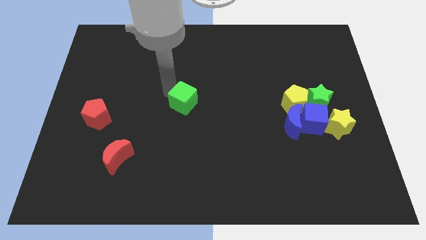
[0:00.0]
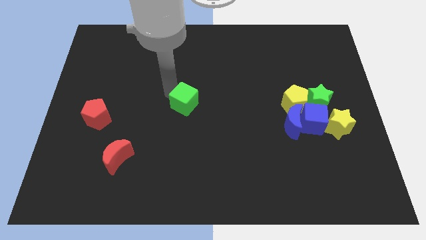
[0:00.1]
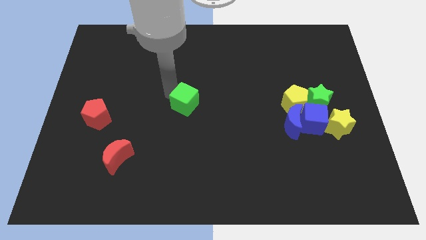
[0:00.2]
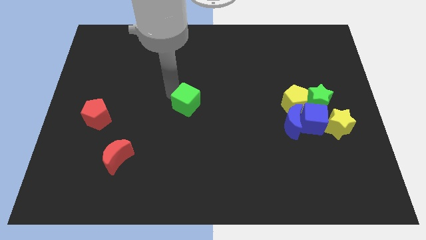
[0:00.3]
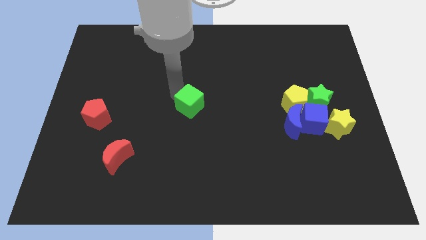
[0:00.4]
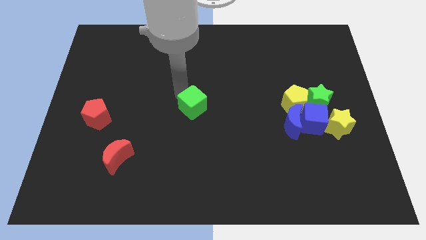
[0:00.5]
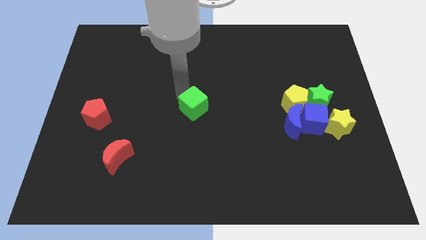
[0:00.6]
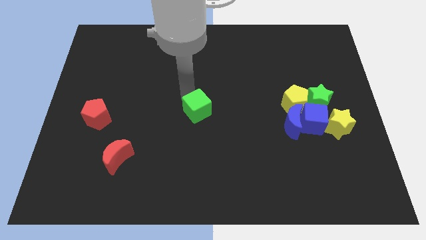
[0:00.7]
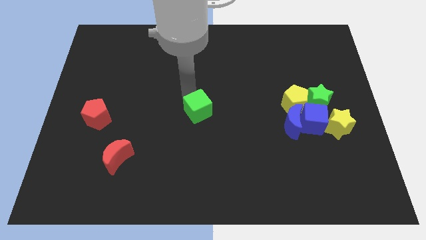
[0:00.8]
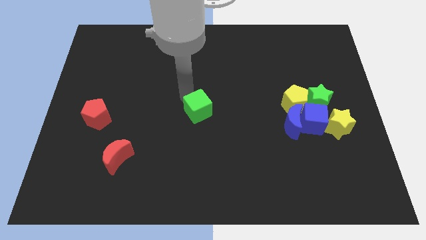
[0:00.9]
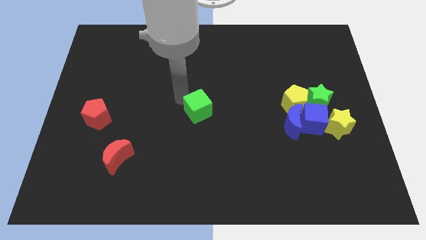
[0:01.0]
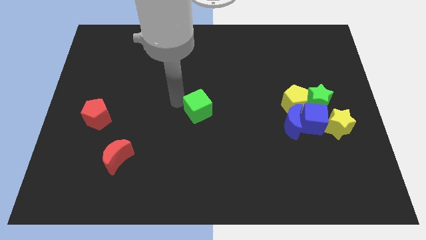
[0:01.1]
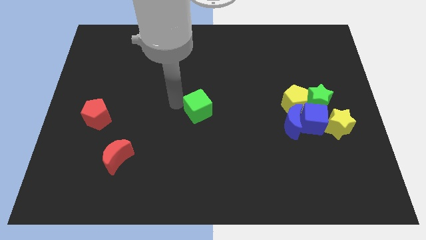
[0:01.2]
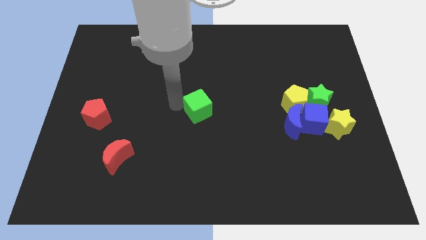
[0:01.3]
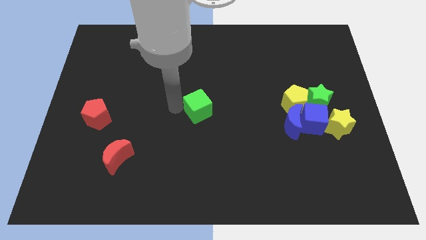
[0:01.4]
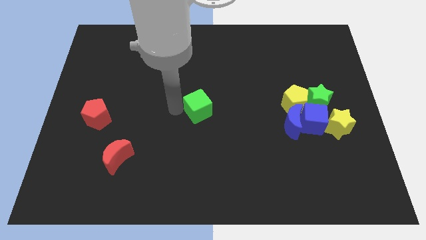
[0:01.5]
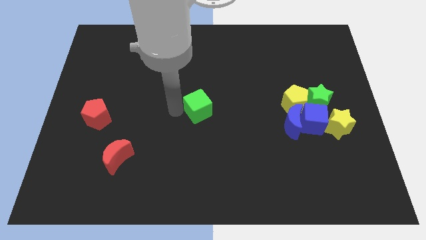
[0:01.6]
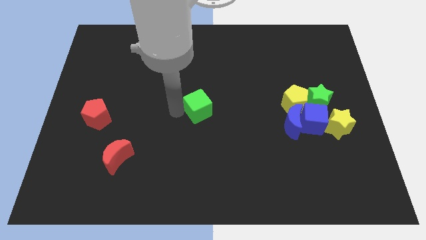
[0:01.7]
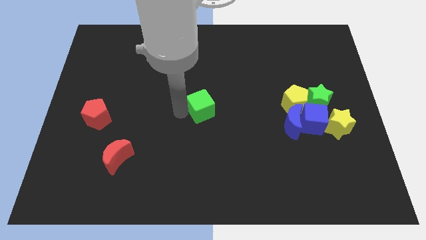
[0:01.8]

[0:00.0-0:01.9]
move the green cube at the center of the board

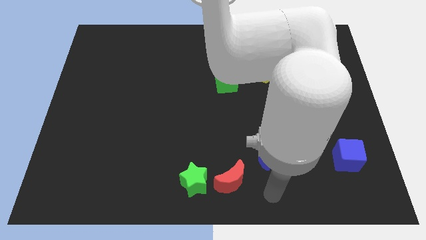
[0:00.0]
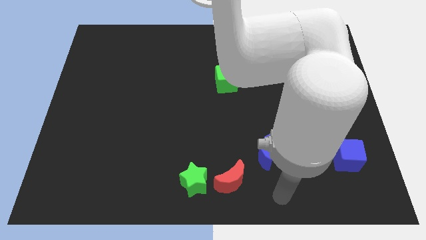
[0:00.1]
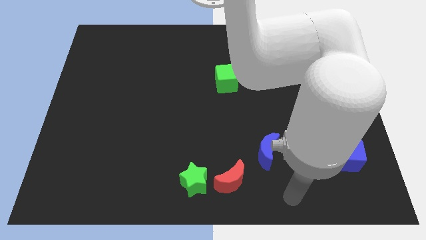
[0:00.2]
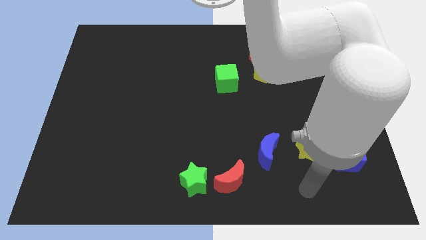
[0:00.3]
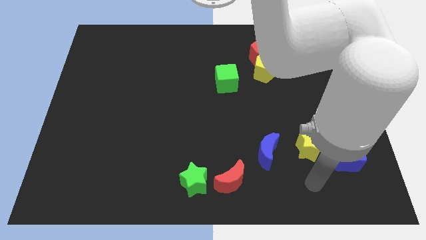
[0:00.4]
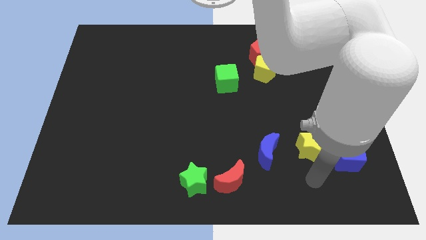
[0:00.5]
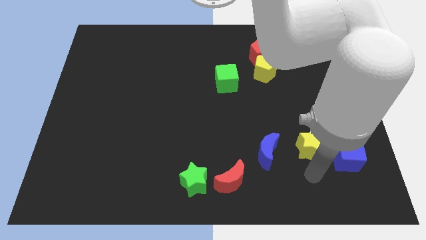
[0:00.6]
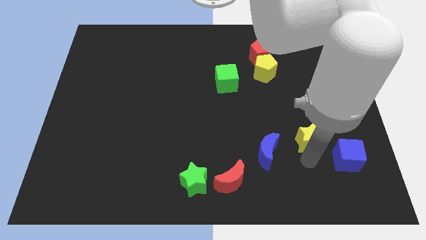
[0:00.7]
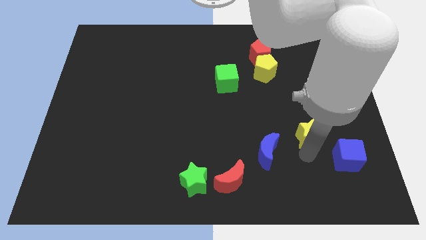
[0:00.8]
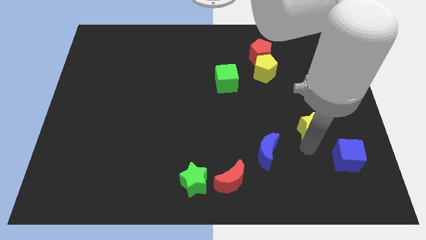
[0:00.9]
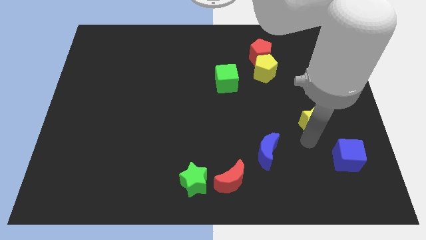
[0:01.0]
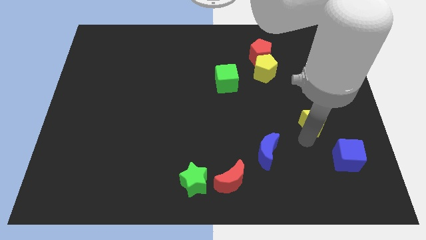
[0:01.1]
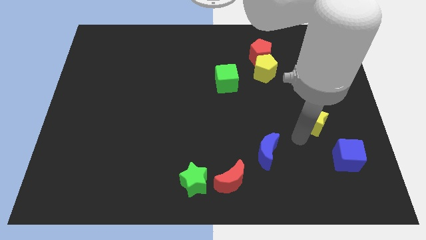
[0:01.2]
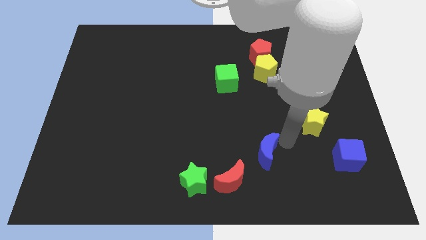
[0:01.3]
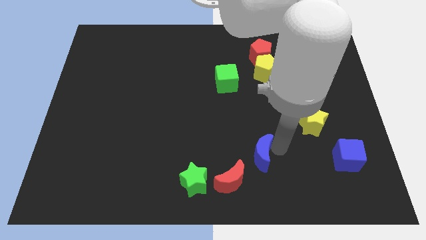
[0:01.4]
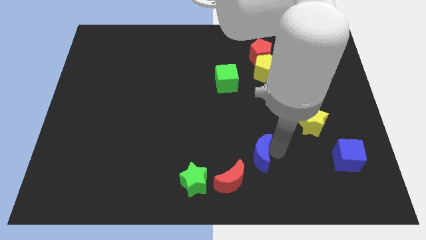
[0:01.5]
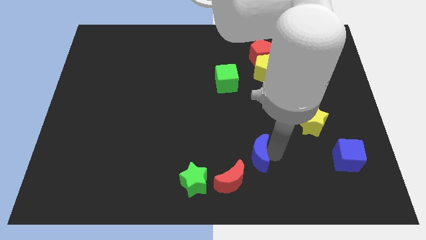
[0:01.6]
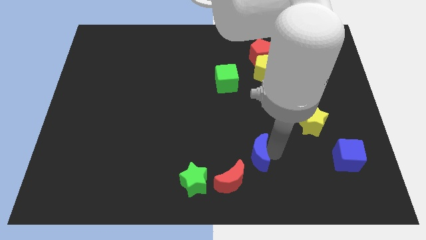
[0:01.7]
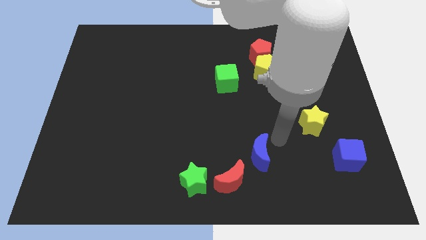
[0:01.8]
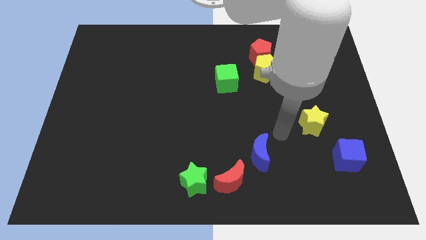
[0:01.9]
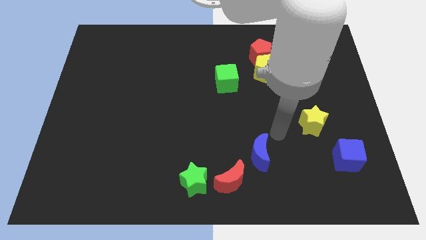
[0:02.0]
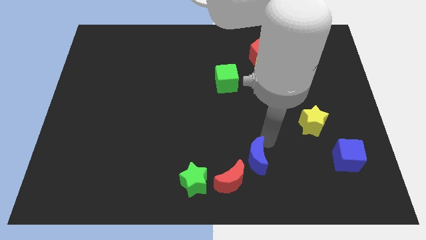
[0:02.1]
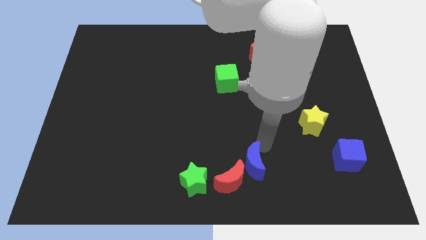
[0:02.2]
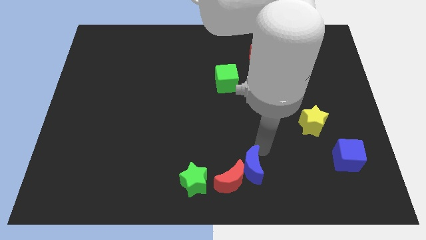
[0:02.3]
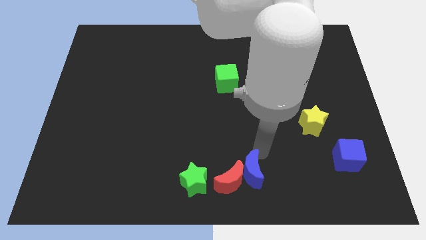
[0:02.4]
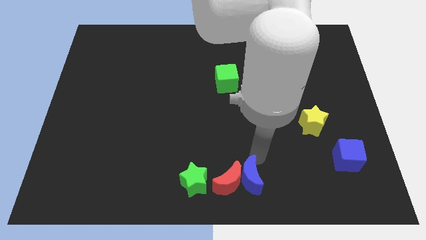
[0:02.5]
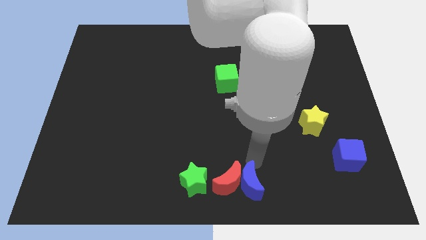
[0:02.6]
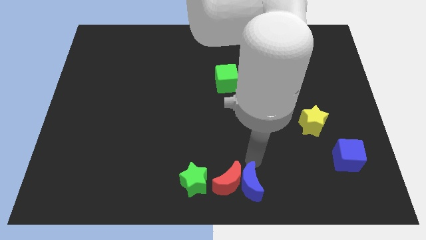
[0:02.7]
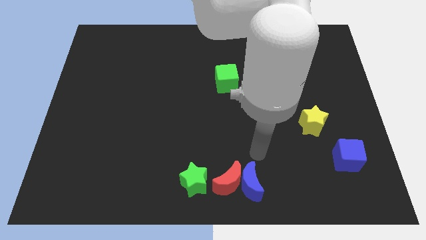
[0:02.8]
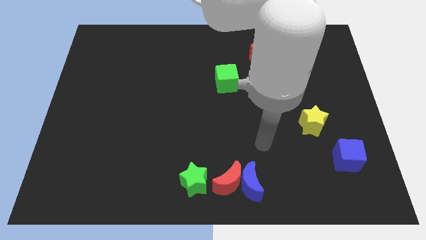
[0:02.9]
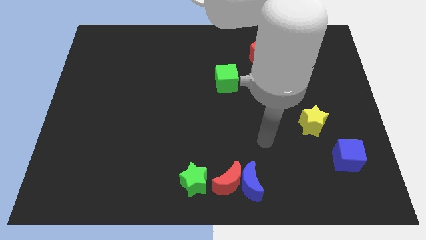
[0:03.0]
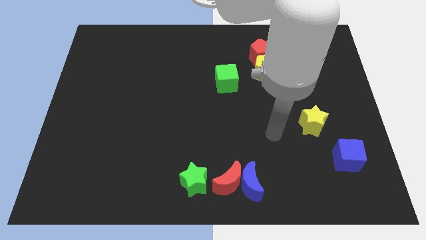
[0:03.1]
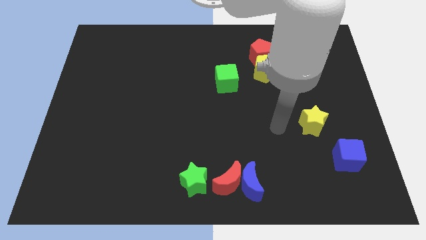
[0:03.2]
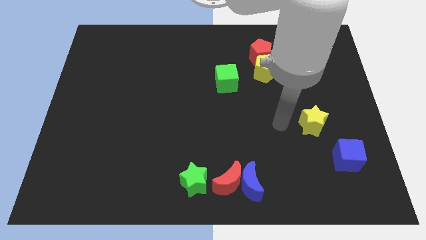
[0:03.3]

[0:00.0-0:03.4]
move the blue moon right beside the red moon

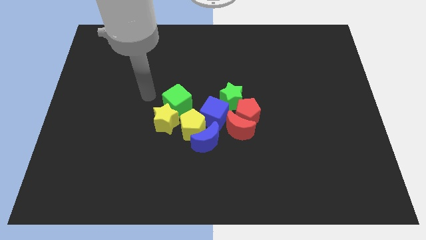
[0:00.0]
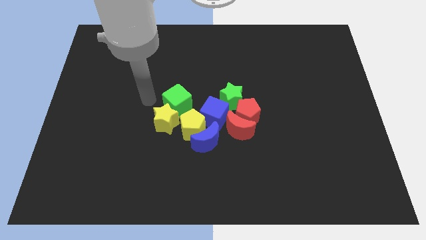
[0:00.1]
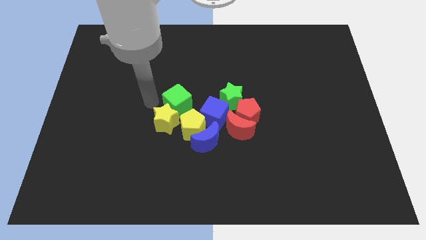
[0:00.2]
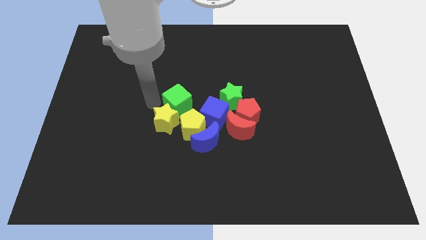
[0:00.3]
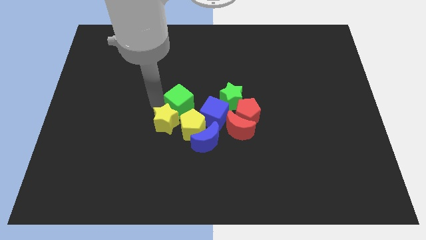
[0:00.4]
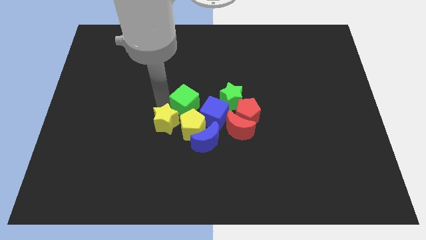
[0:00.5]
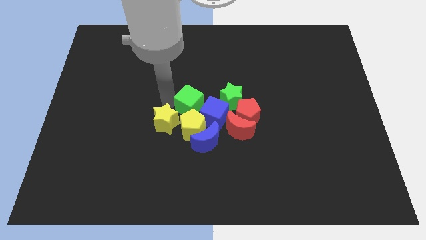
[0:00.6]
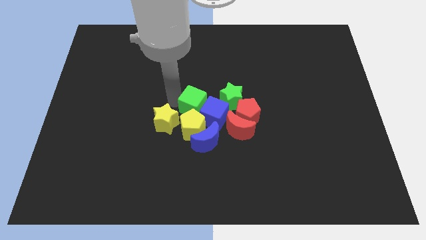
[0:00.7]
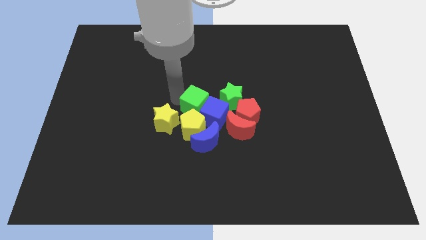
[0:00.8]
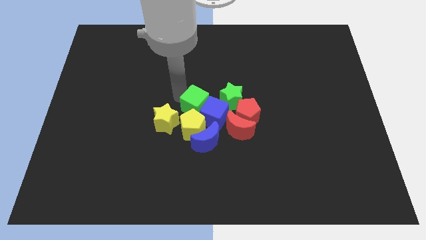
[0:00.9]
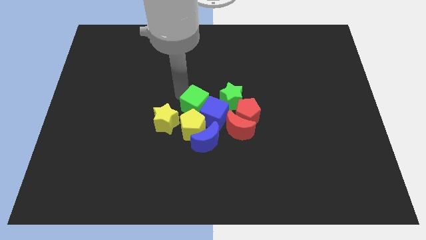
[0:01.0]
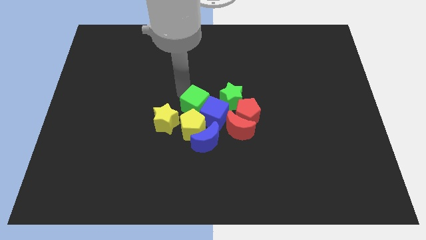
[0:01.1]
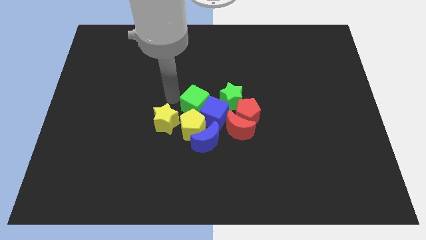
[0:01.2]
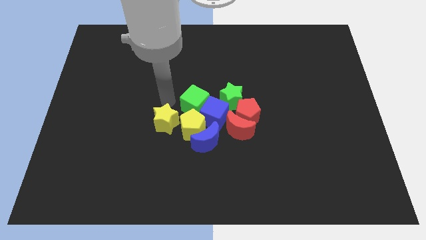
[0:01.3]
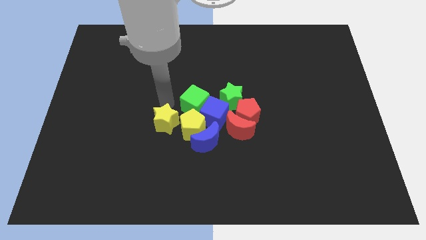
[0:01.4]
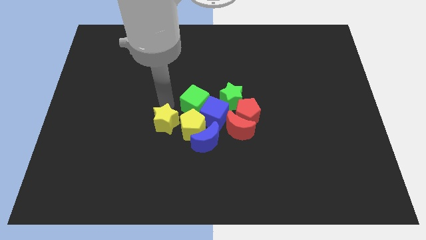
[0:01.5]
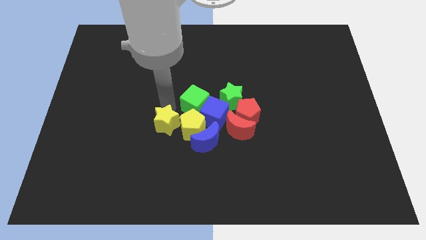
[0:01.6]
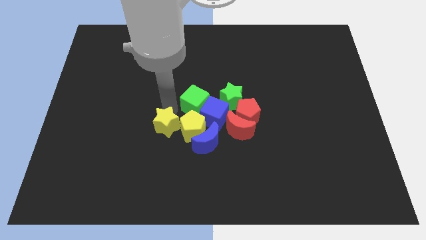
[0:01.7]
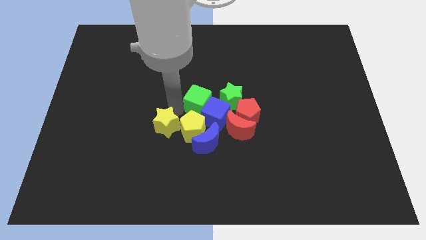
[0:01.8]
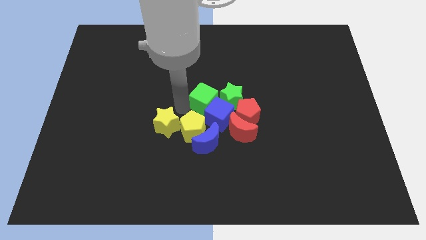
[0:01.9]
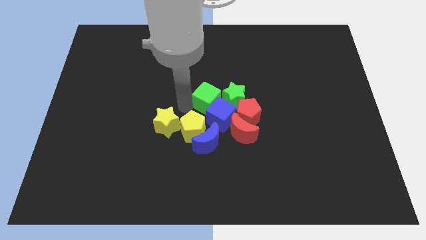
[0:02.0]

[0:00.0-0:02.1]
slide the green cube towards the green star

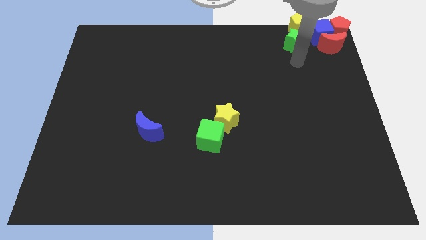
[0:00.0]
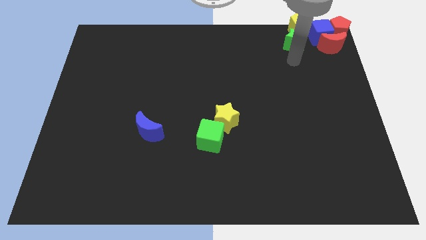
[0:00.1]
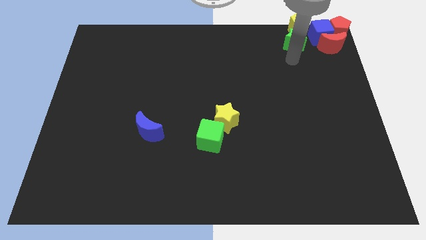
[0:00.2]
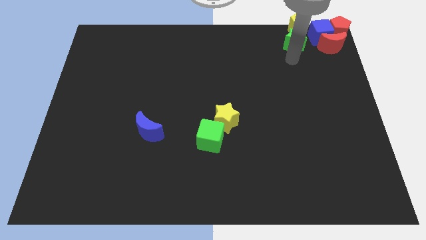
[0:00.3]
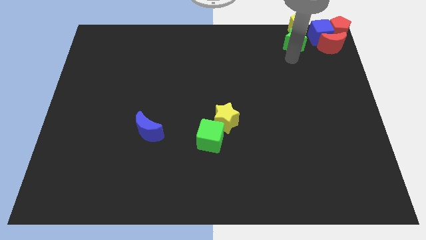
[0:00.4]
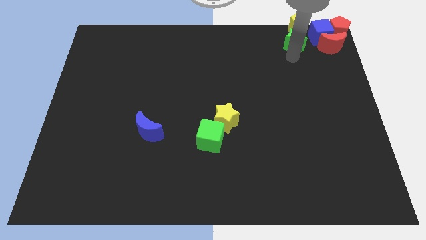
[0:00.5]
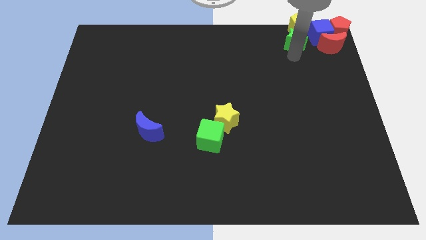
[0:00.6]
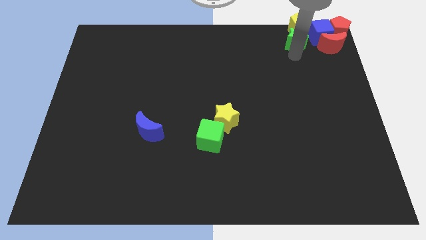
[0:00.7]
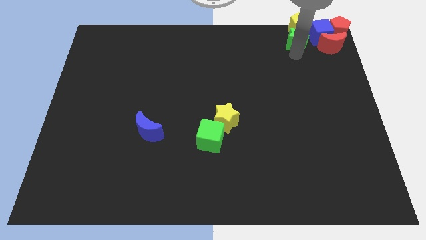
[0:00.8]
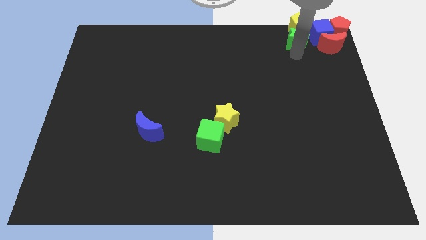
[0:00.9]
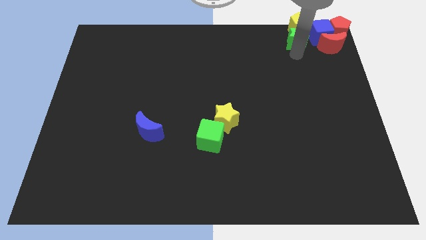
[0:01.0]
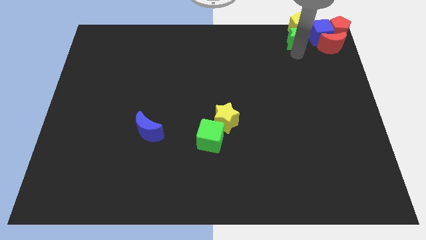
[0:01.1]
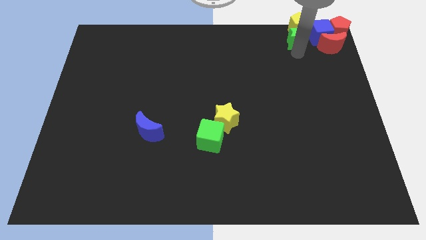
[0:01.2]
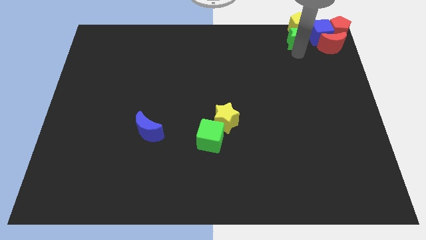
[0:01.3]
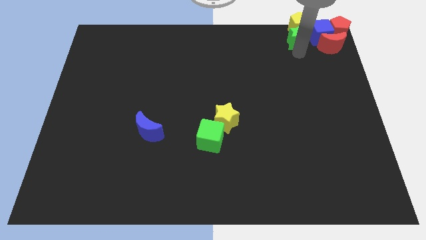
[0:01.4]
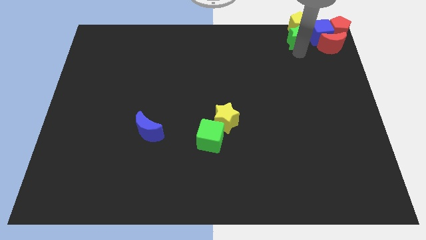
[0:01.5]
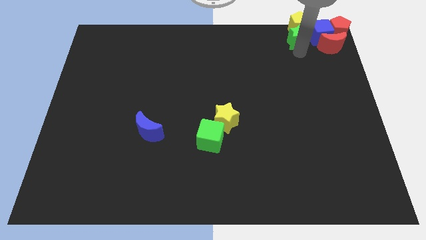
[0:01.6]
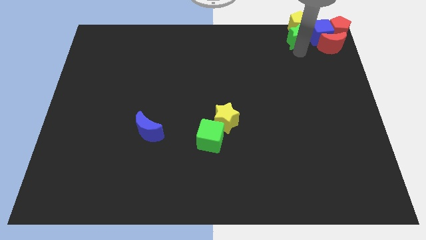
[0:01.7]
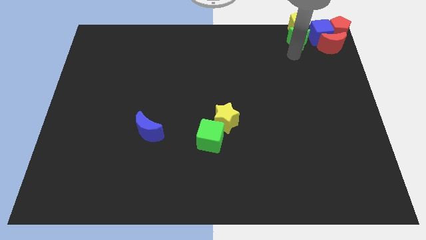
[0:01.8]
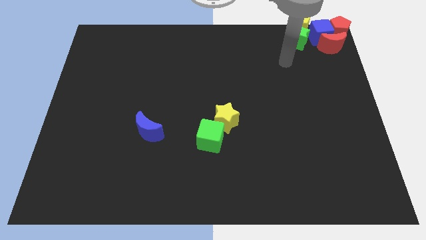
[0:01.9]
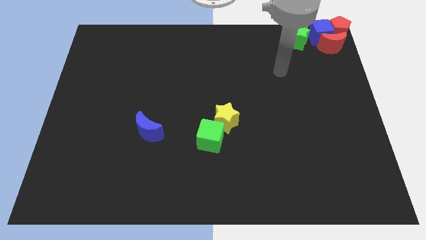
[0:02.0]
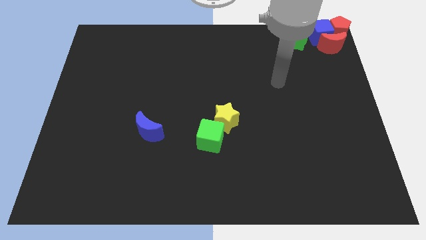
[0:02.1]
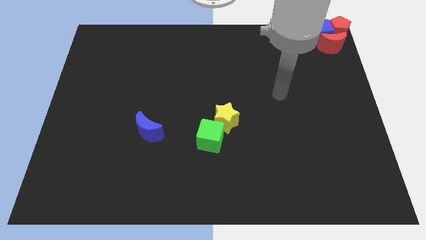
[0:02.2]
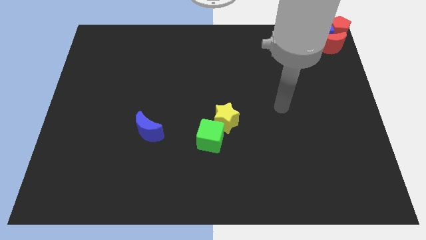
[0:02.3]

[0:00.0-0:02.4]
move the arm towards the bottom of board
